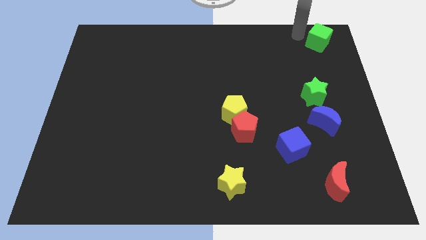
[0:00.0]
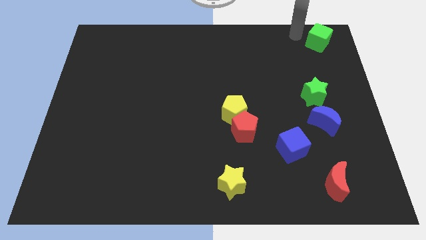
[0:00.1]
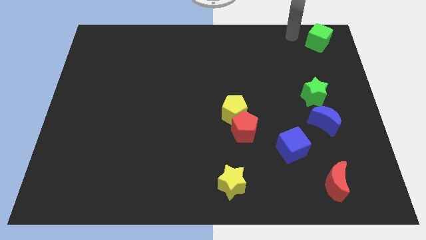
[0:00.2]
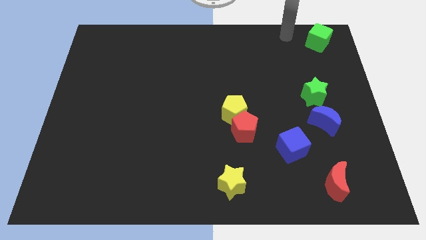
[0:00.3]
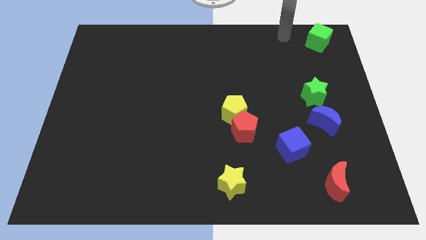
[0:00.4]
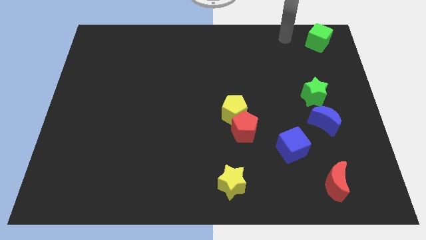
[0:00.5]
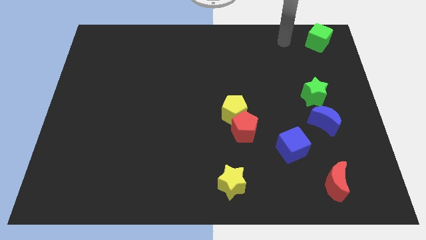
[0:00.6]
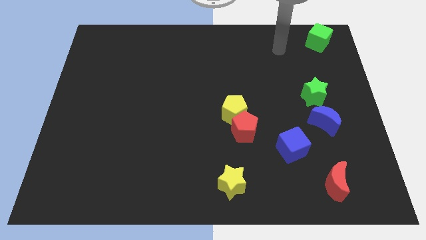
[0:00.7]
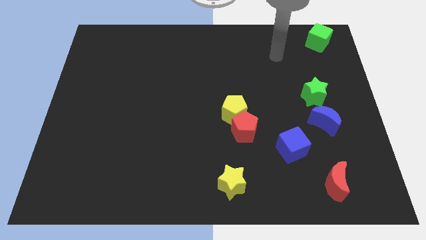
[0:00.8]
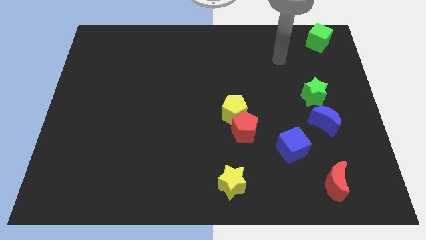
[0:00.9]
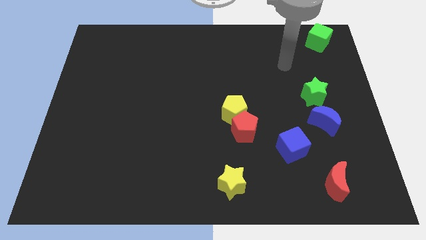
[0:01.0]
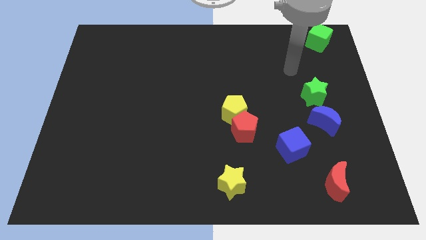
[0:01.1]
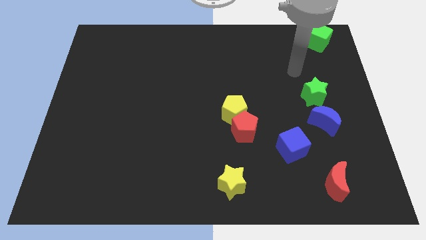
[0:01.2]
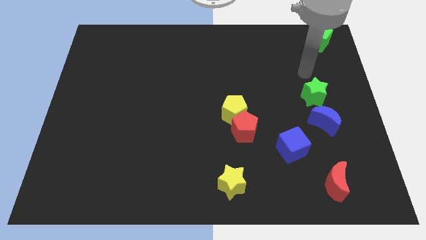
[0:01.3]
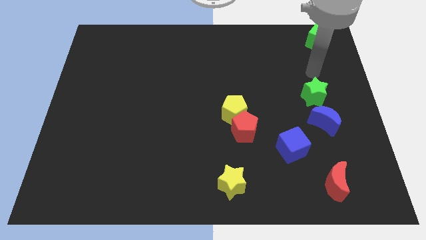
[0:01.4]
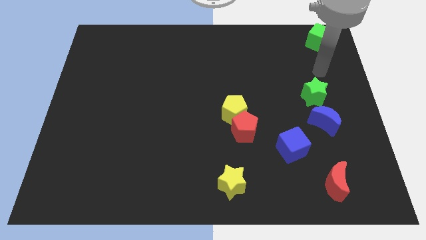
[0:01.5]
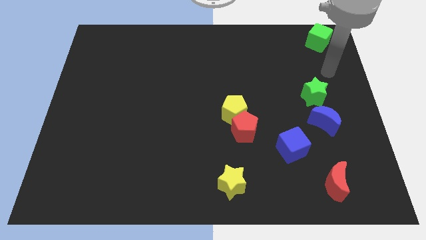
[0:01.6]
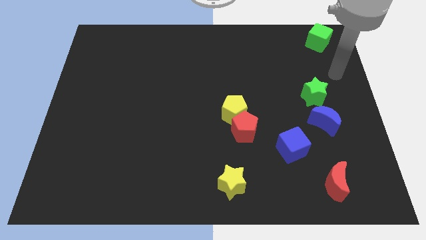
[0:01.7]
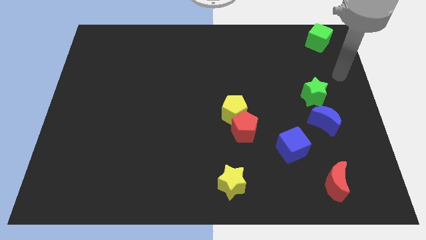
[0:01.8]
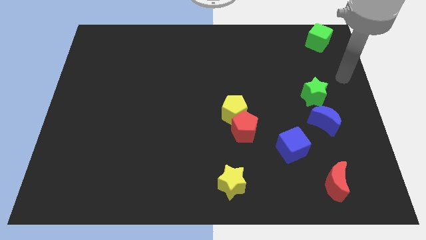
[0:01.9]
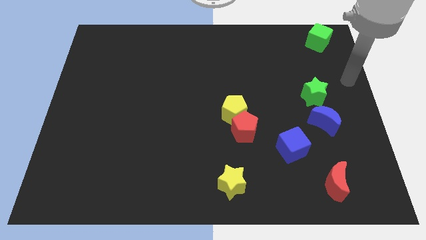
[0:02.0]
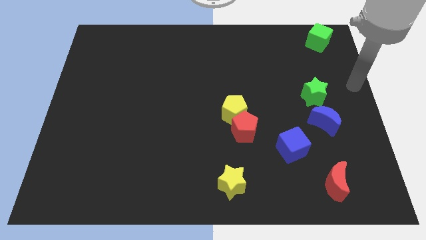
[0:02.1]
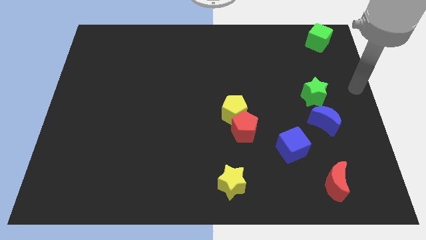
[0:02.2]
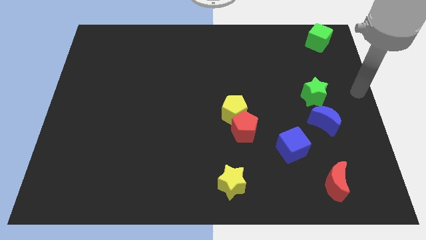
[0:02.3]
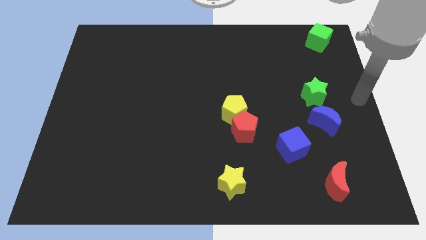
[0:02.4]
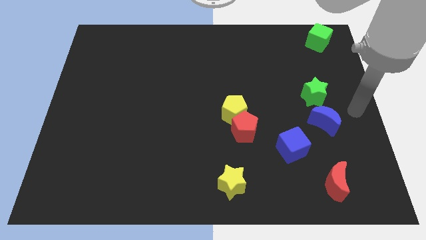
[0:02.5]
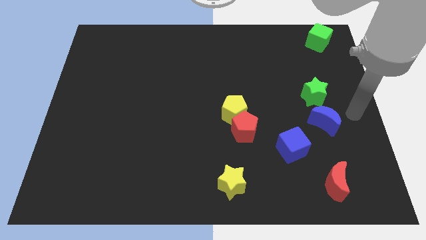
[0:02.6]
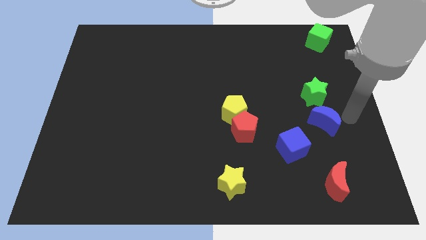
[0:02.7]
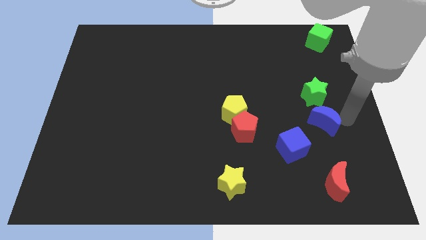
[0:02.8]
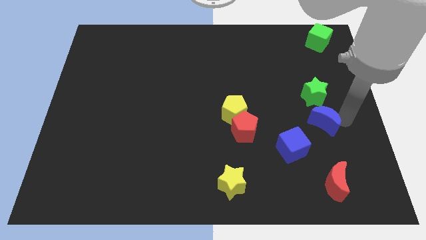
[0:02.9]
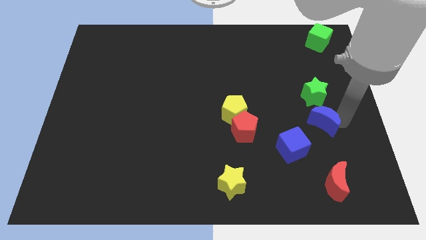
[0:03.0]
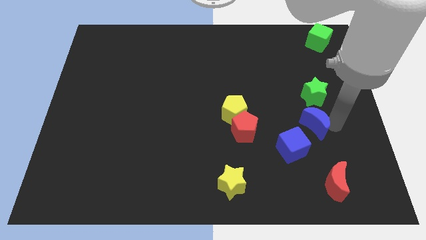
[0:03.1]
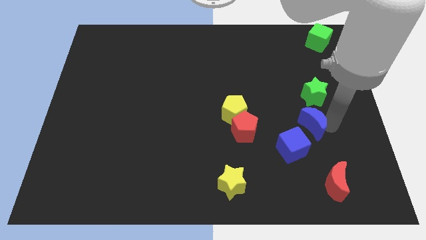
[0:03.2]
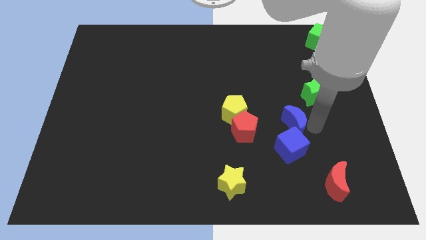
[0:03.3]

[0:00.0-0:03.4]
drag the blue moon into the top side of the blue cube

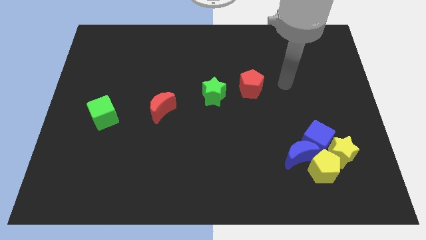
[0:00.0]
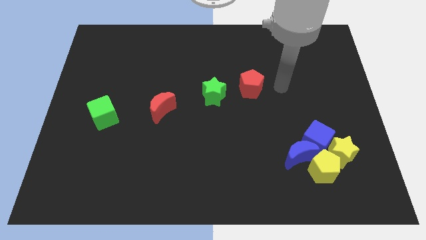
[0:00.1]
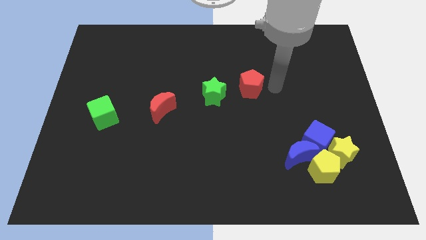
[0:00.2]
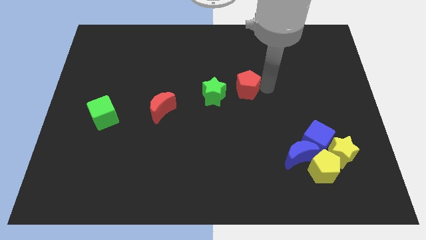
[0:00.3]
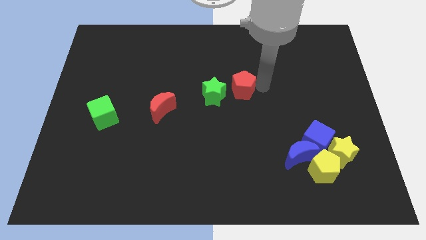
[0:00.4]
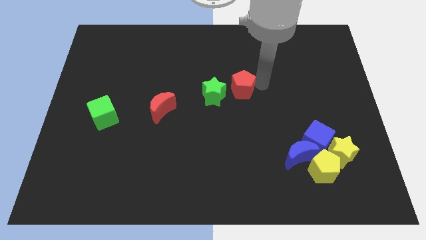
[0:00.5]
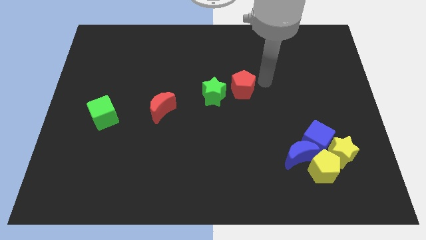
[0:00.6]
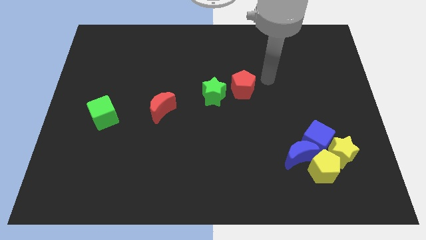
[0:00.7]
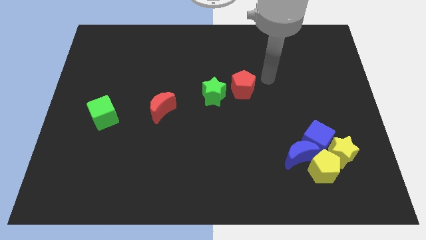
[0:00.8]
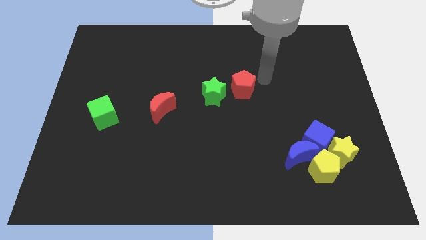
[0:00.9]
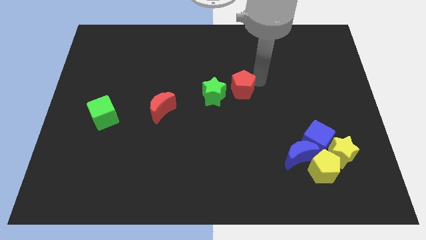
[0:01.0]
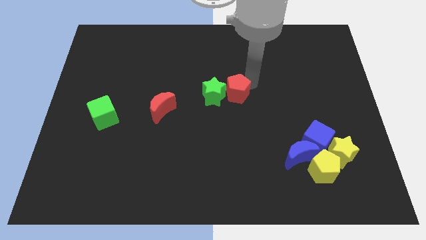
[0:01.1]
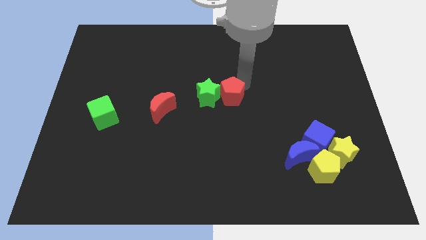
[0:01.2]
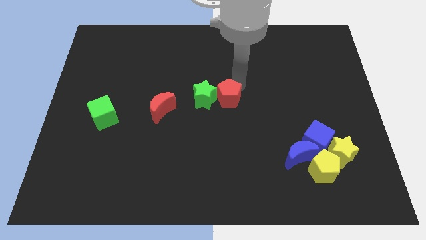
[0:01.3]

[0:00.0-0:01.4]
move the red pentagon into the right side of the green star

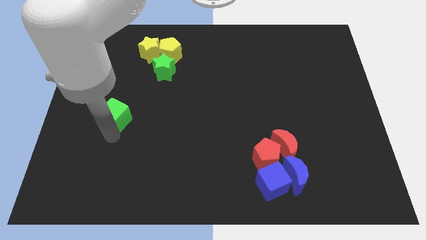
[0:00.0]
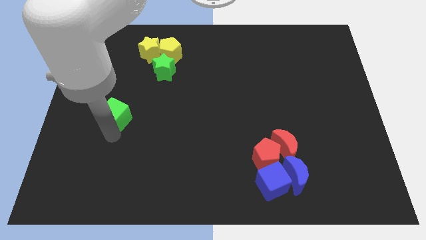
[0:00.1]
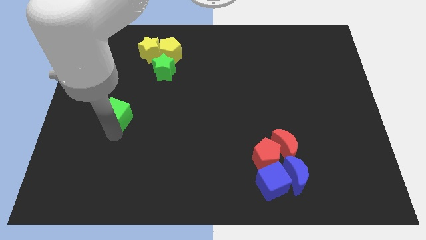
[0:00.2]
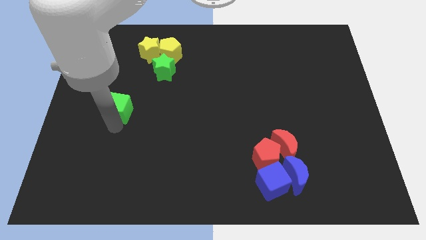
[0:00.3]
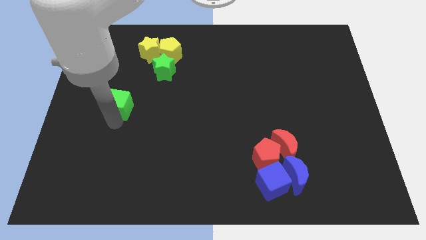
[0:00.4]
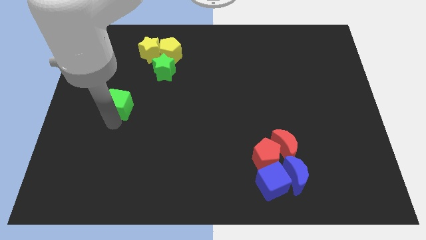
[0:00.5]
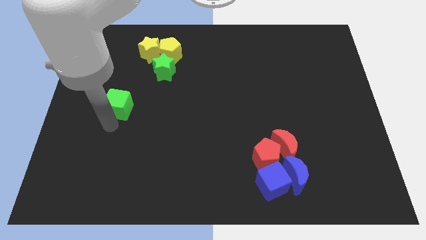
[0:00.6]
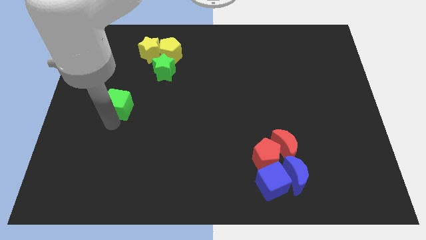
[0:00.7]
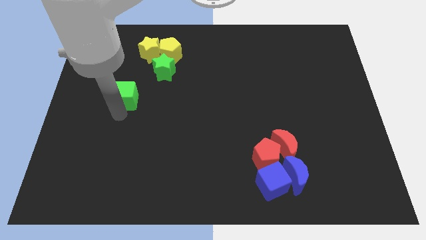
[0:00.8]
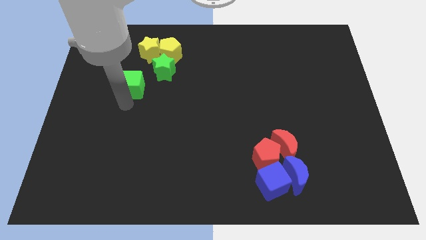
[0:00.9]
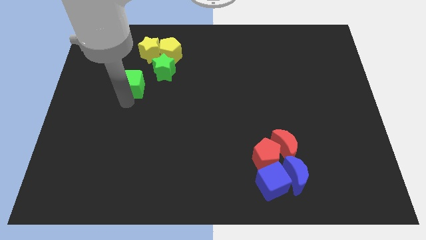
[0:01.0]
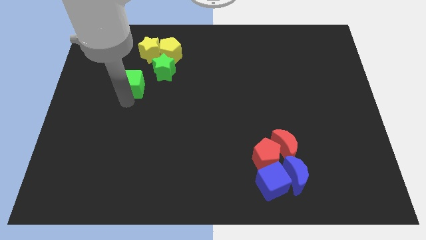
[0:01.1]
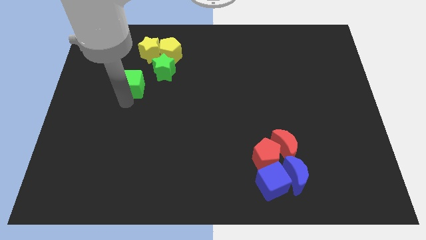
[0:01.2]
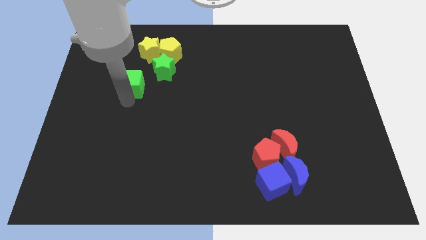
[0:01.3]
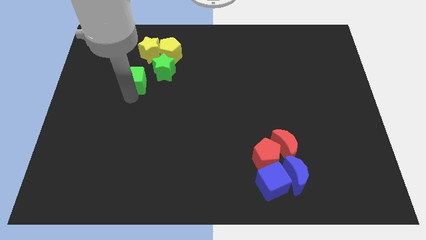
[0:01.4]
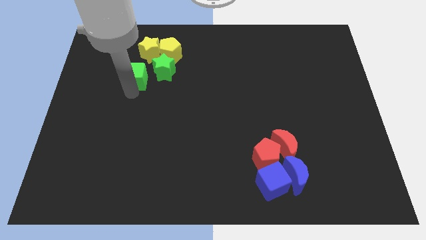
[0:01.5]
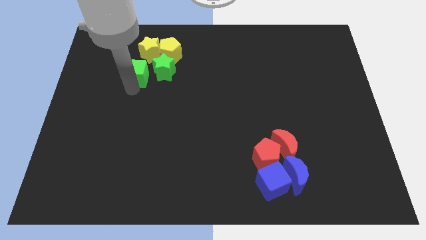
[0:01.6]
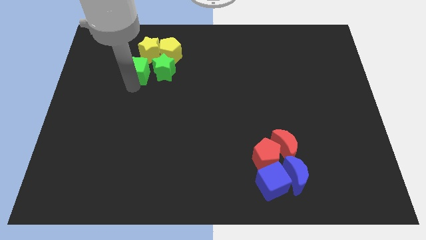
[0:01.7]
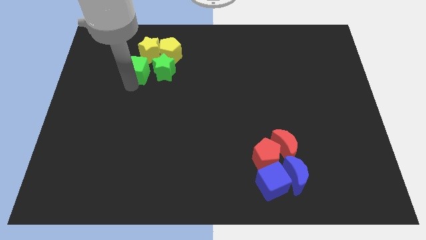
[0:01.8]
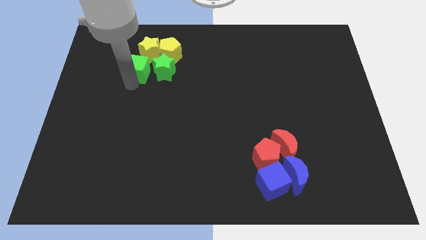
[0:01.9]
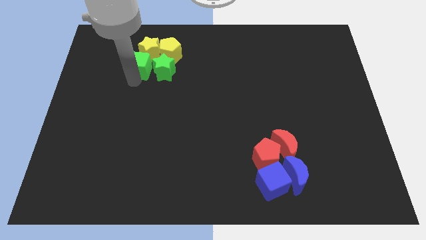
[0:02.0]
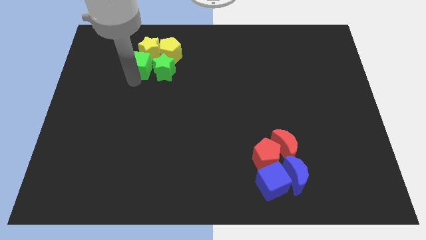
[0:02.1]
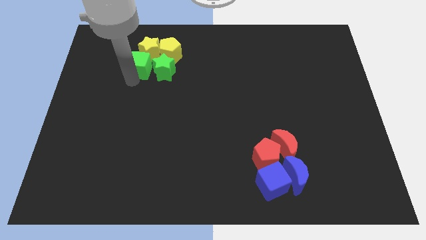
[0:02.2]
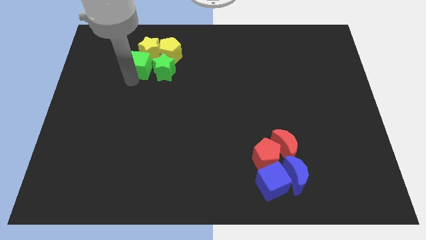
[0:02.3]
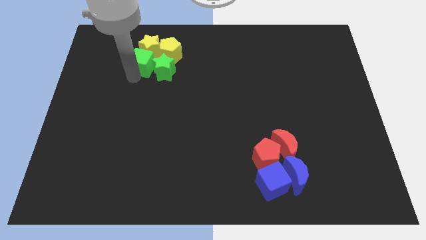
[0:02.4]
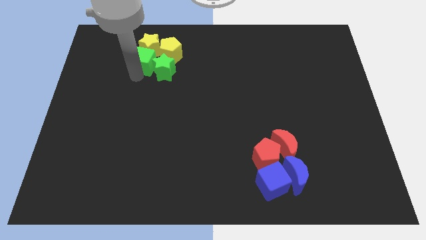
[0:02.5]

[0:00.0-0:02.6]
move the green cube into yellow star

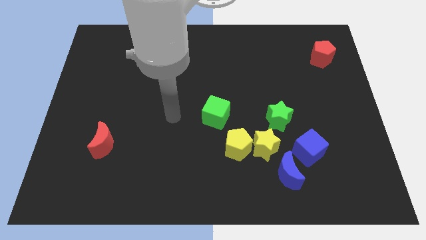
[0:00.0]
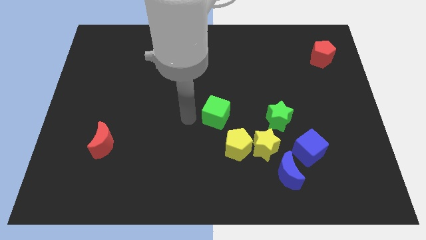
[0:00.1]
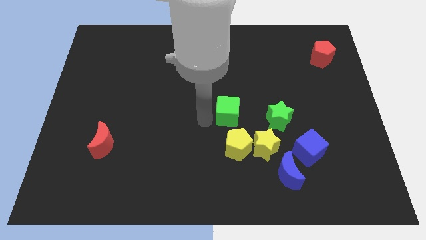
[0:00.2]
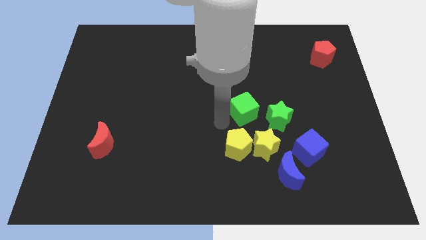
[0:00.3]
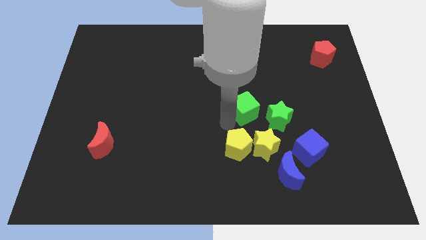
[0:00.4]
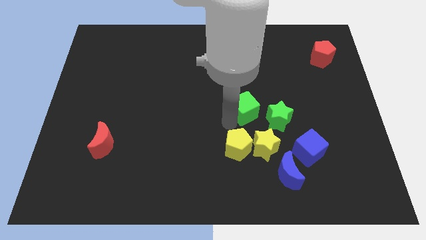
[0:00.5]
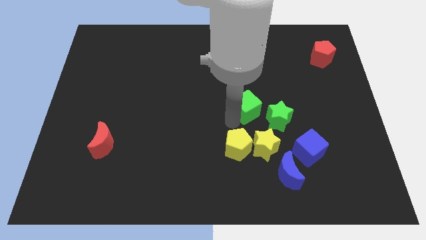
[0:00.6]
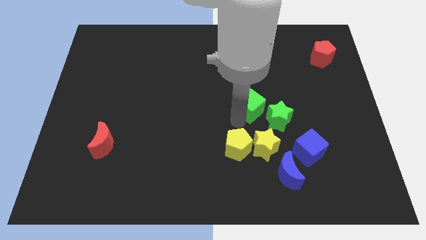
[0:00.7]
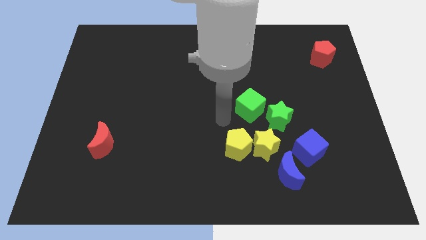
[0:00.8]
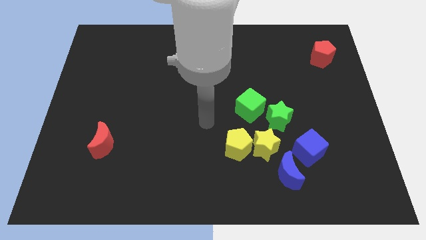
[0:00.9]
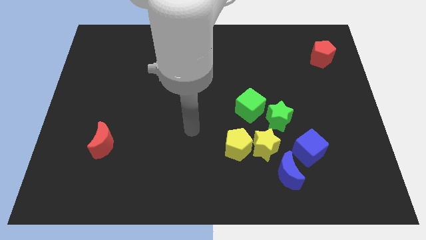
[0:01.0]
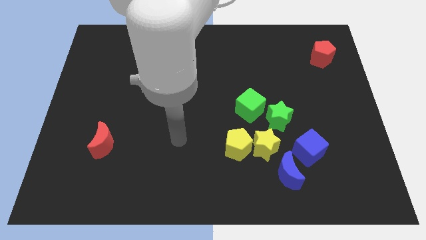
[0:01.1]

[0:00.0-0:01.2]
push the green cube to the top left of the green star

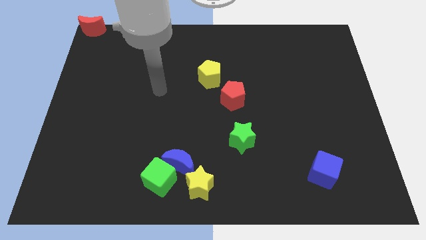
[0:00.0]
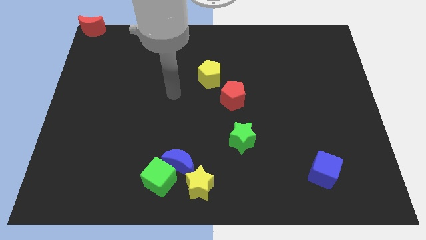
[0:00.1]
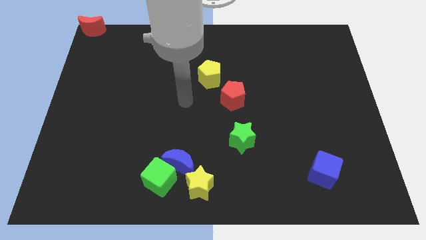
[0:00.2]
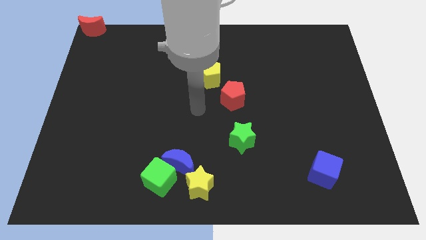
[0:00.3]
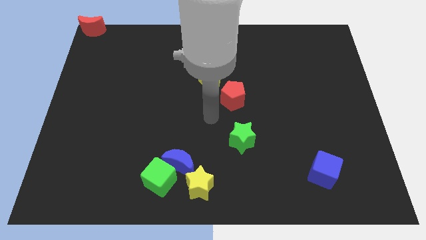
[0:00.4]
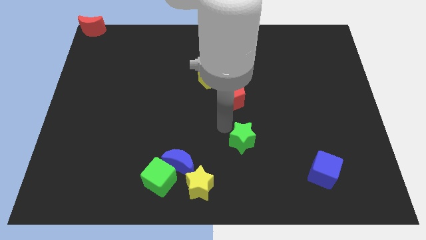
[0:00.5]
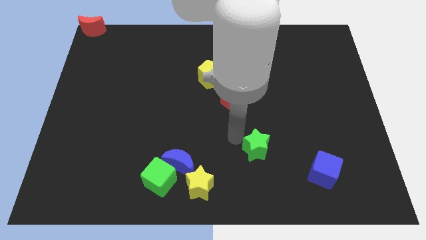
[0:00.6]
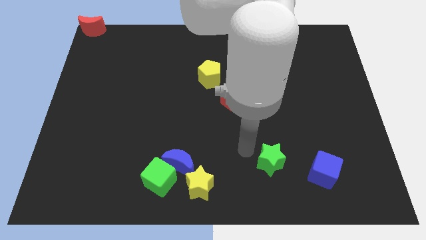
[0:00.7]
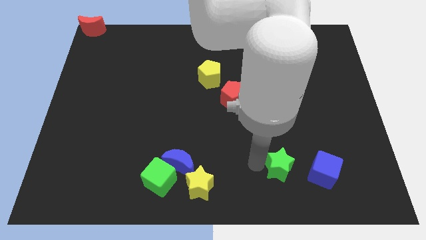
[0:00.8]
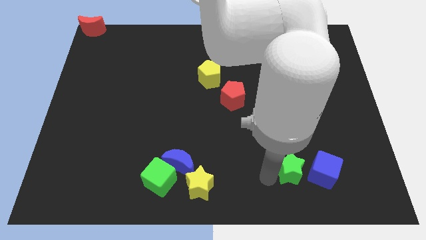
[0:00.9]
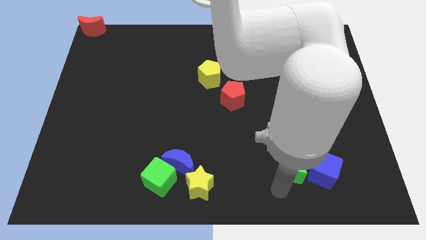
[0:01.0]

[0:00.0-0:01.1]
push the green star to the left of the blue cube
